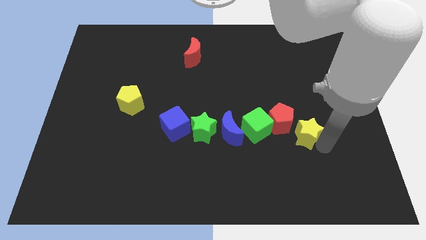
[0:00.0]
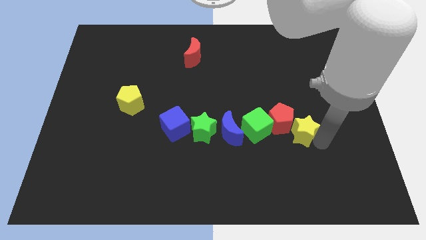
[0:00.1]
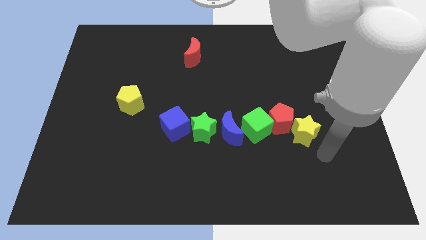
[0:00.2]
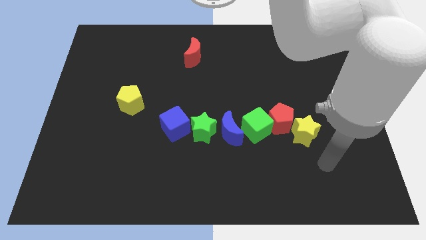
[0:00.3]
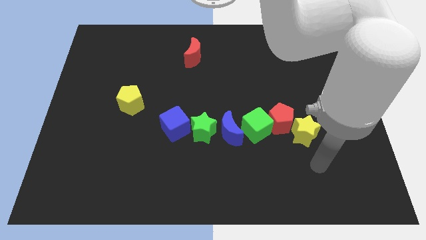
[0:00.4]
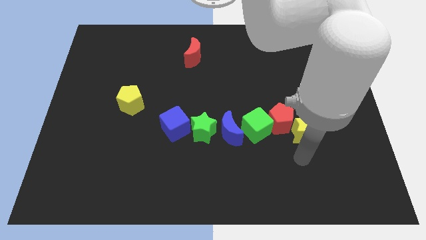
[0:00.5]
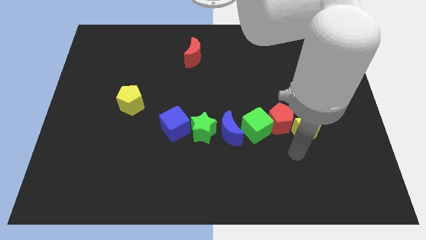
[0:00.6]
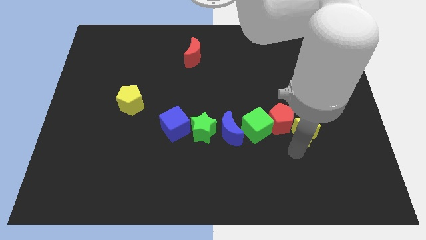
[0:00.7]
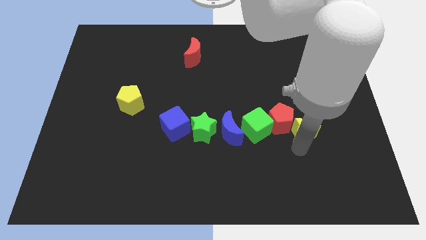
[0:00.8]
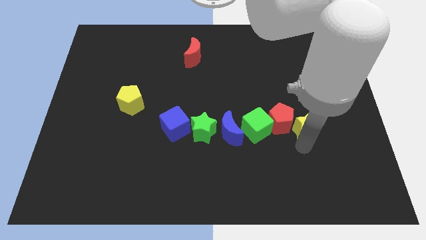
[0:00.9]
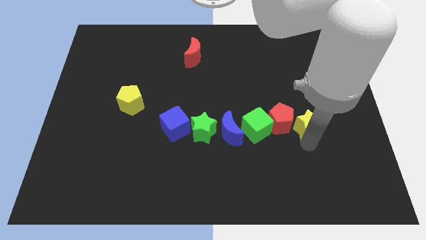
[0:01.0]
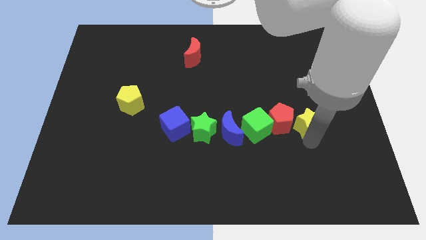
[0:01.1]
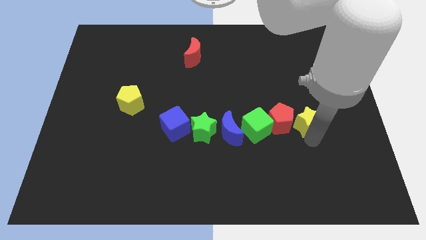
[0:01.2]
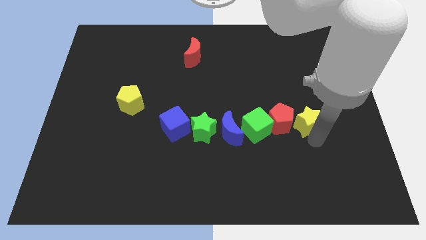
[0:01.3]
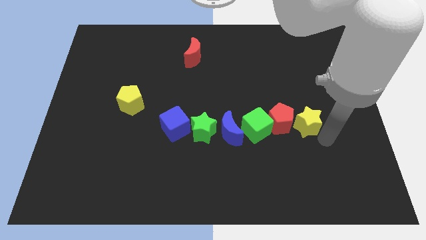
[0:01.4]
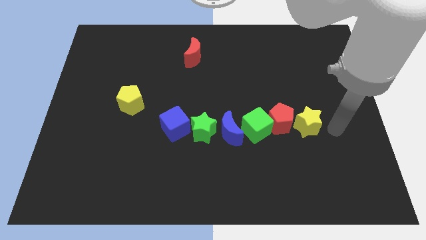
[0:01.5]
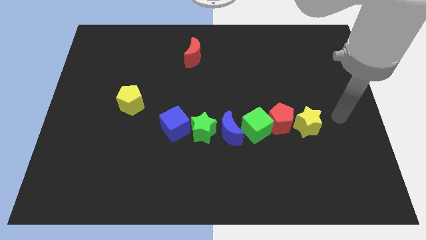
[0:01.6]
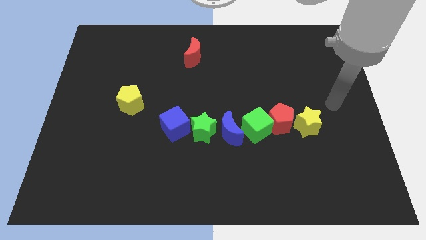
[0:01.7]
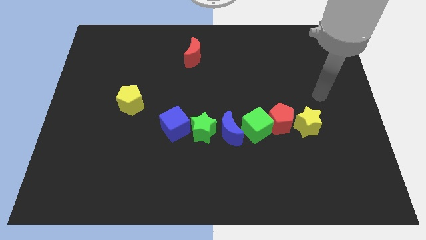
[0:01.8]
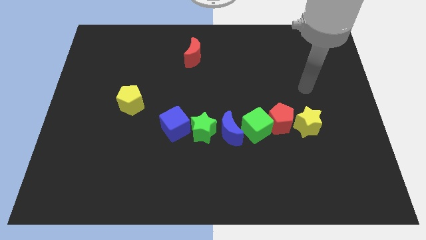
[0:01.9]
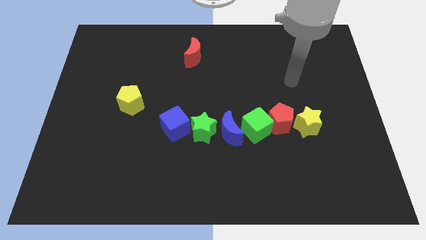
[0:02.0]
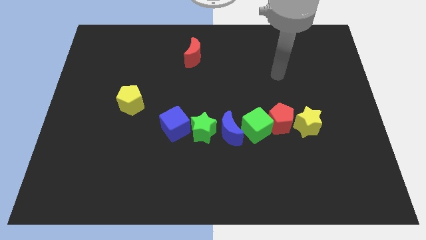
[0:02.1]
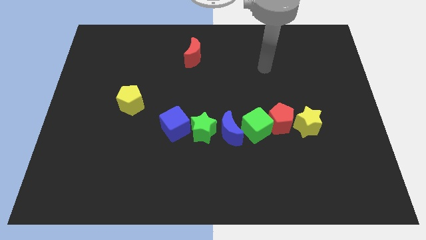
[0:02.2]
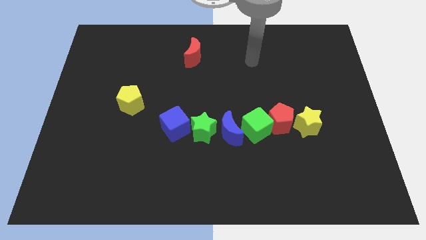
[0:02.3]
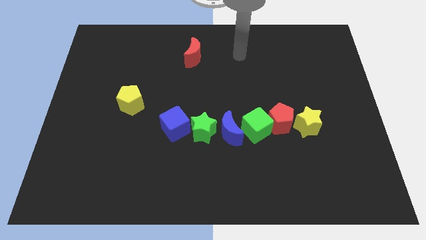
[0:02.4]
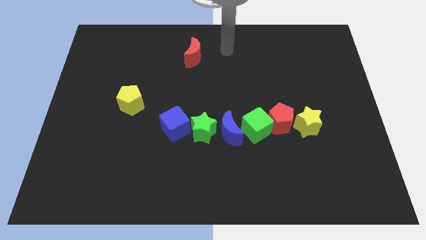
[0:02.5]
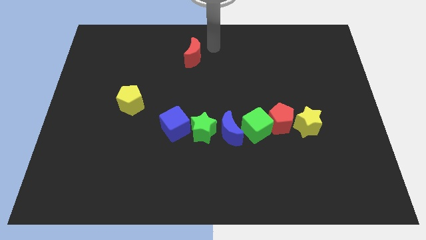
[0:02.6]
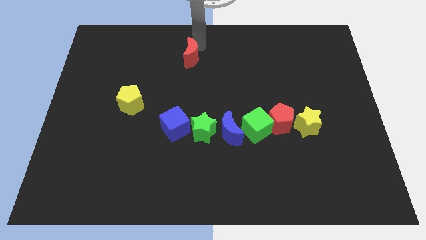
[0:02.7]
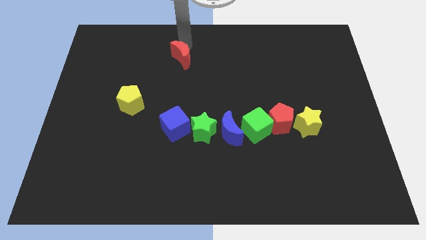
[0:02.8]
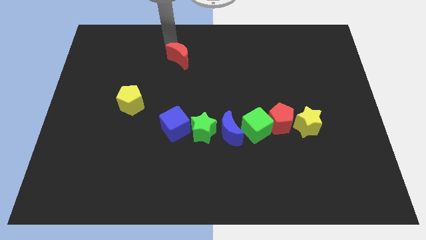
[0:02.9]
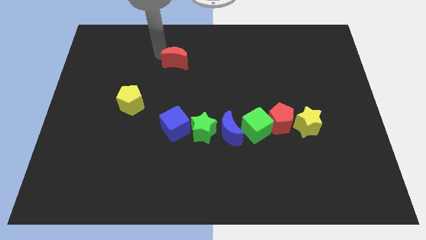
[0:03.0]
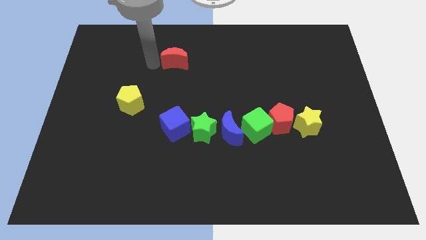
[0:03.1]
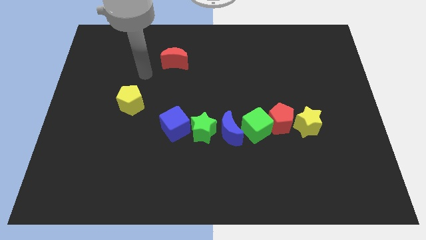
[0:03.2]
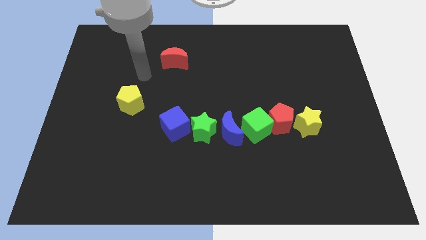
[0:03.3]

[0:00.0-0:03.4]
slightly move the red moon towards the blue cube

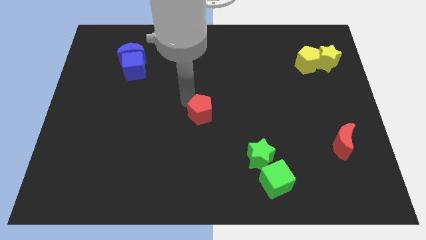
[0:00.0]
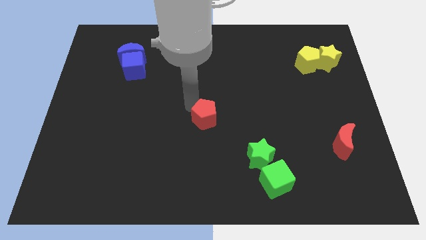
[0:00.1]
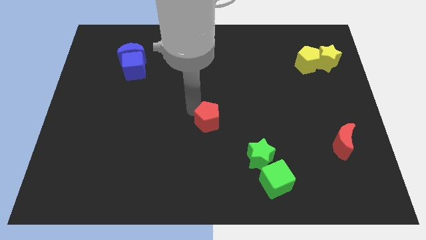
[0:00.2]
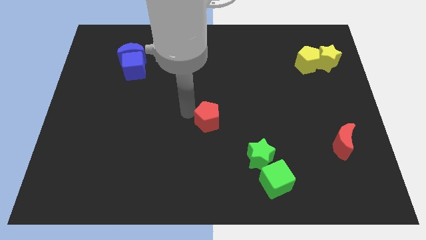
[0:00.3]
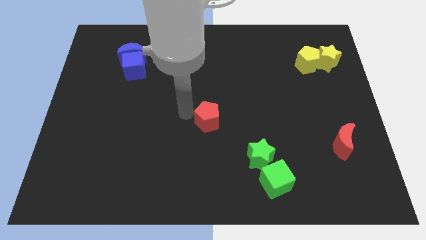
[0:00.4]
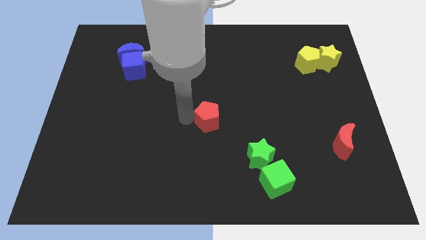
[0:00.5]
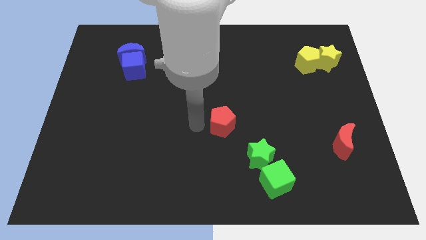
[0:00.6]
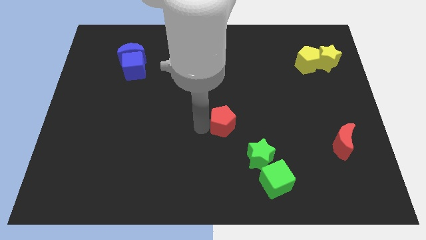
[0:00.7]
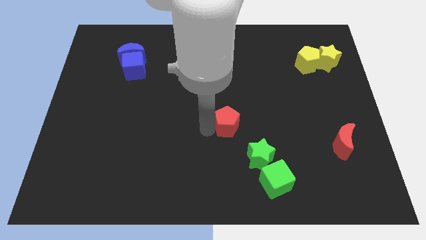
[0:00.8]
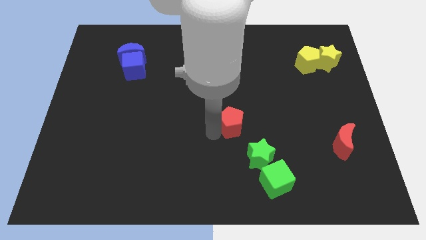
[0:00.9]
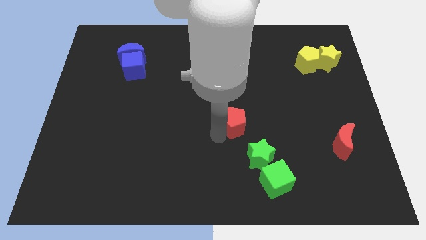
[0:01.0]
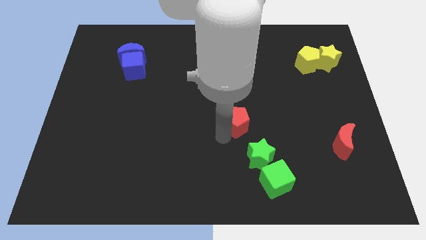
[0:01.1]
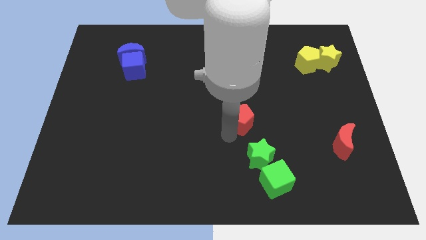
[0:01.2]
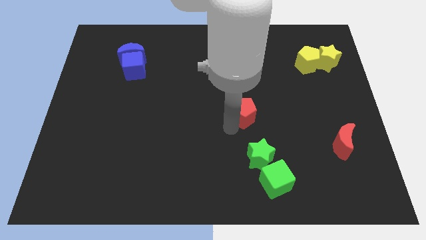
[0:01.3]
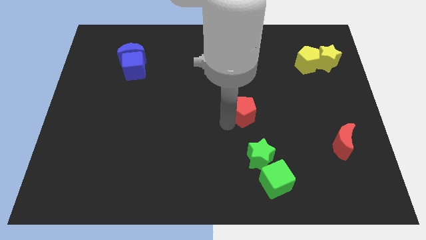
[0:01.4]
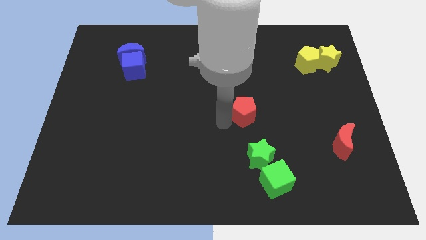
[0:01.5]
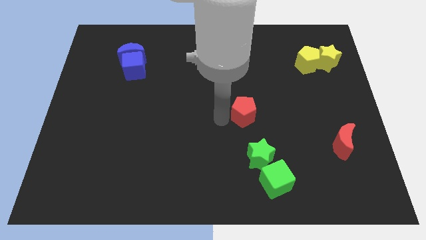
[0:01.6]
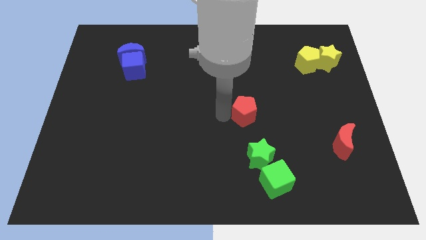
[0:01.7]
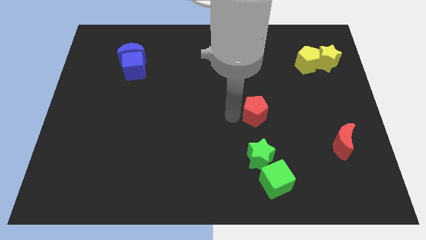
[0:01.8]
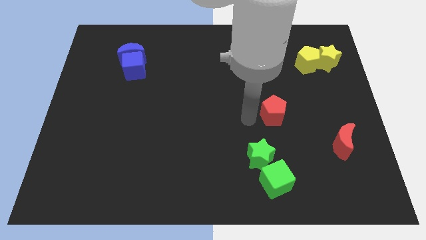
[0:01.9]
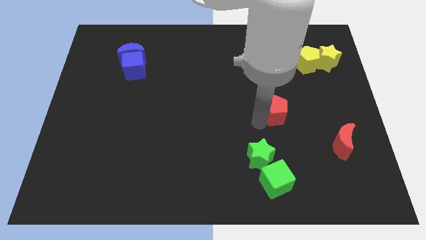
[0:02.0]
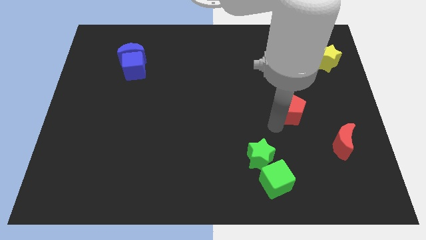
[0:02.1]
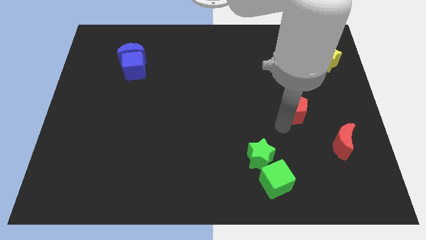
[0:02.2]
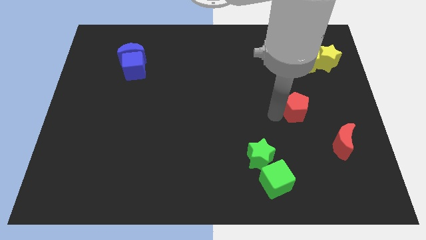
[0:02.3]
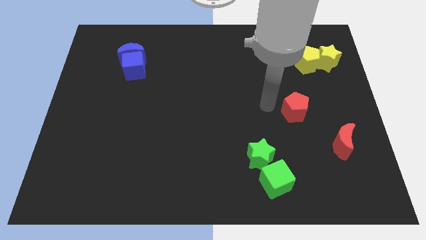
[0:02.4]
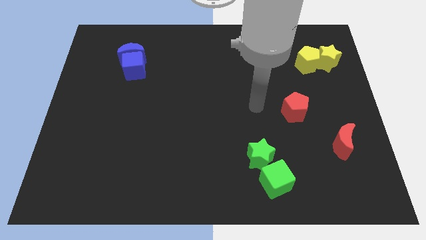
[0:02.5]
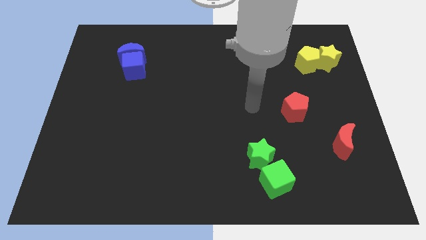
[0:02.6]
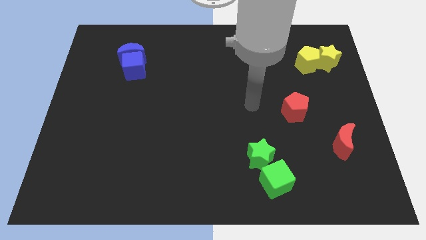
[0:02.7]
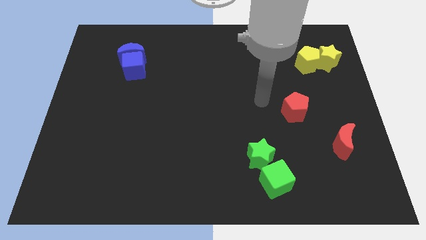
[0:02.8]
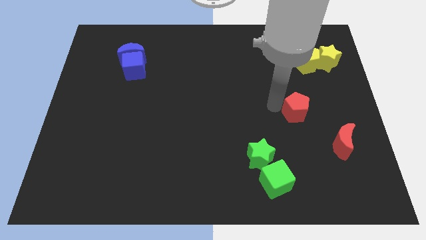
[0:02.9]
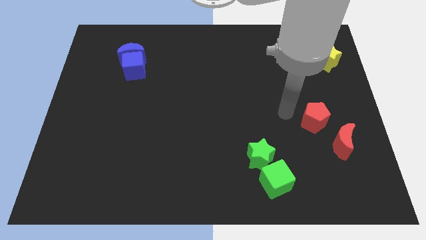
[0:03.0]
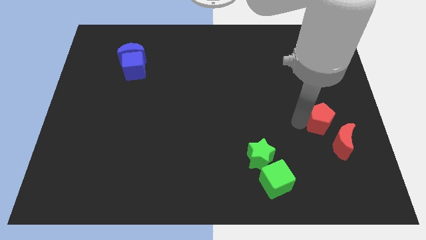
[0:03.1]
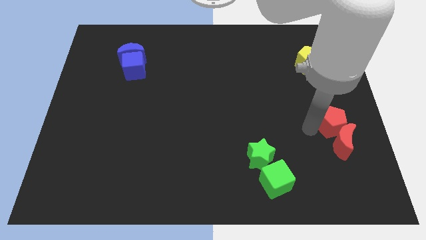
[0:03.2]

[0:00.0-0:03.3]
move the red pentagon close to the red crescent

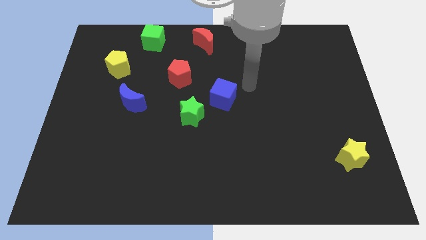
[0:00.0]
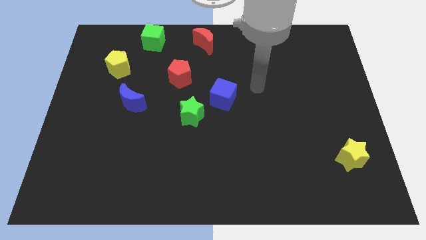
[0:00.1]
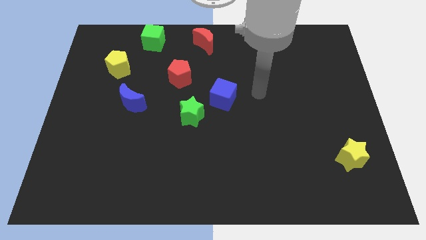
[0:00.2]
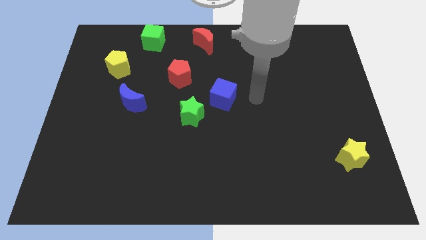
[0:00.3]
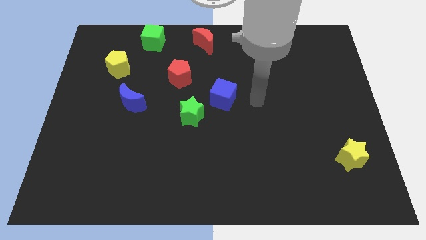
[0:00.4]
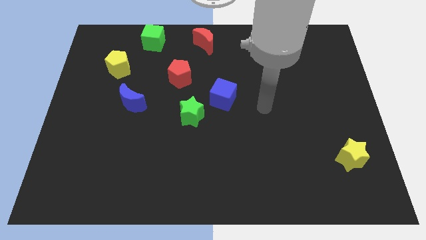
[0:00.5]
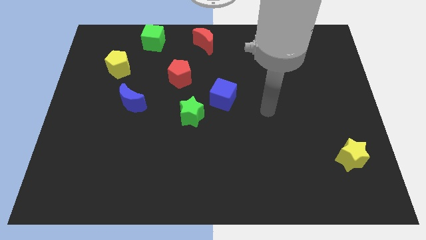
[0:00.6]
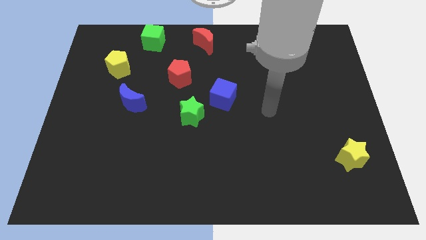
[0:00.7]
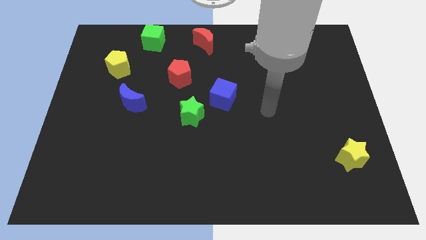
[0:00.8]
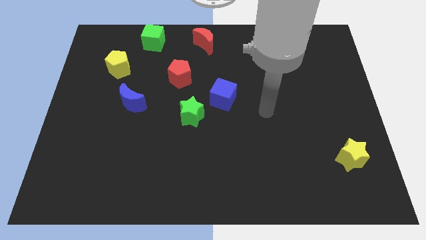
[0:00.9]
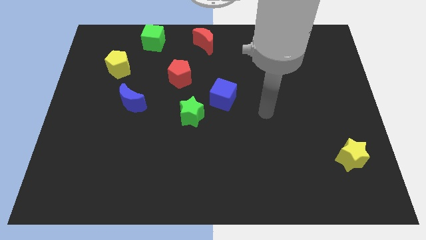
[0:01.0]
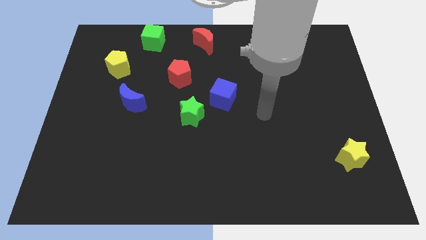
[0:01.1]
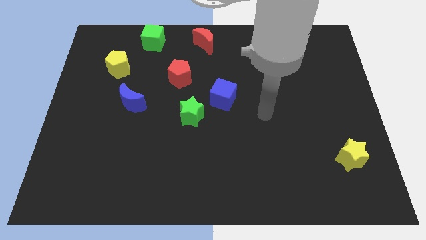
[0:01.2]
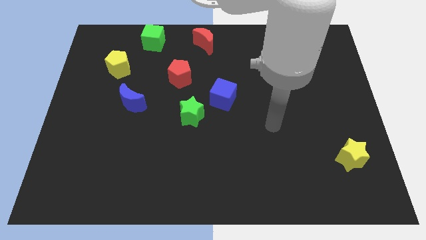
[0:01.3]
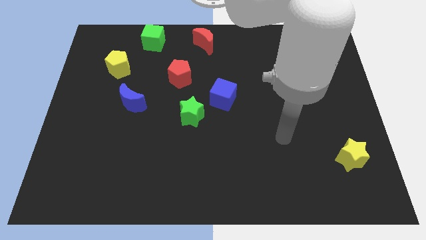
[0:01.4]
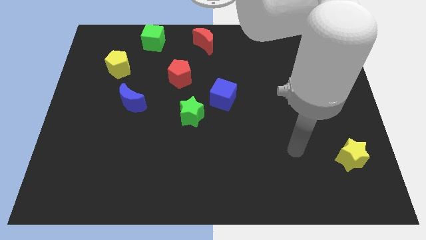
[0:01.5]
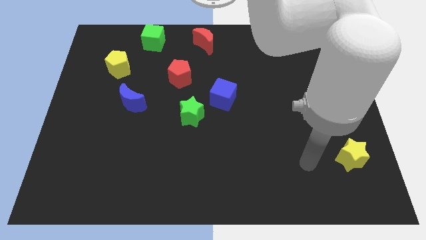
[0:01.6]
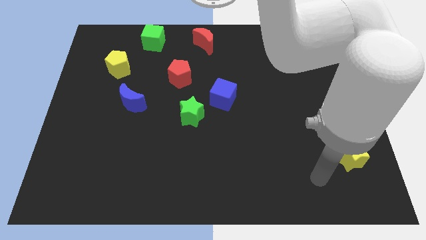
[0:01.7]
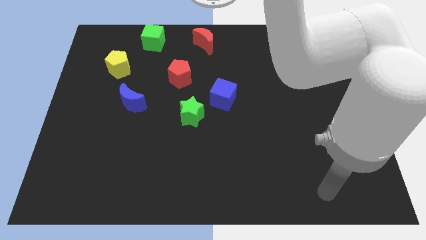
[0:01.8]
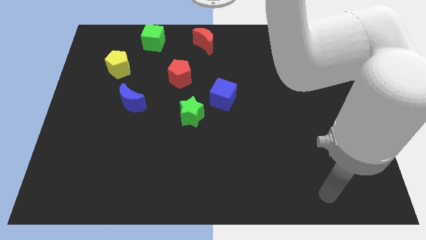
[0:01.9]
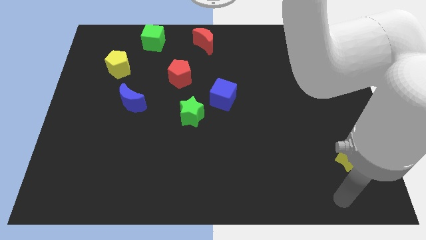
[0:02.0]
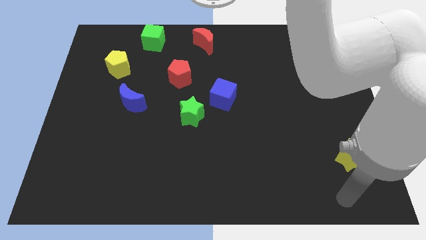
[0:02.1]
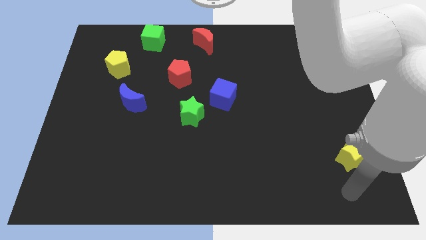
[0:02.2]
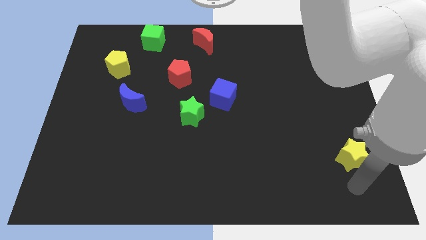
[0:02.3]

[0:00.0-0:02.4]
place your arm below the yellow star
